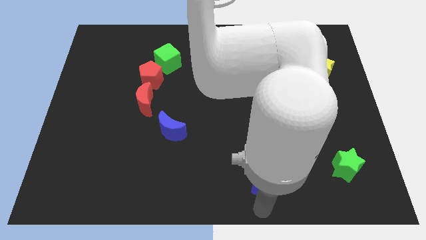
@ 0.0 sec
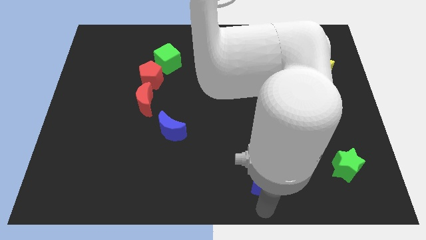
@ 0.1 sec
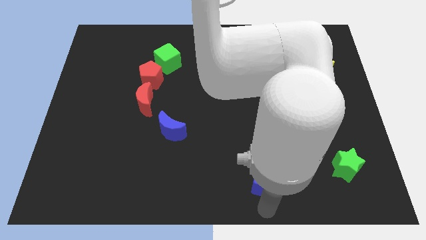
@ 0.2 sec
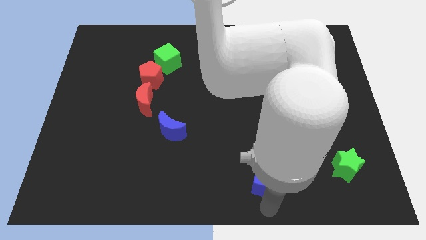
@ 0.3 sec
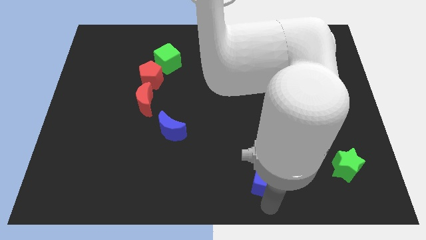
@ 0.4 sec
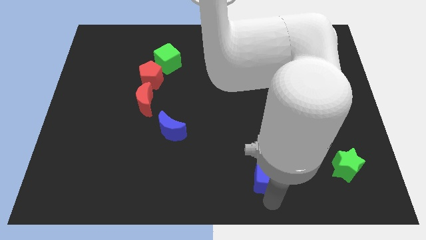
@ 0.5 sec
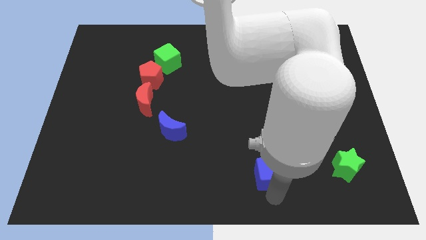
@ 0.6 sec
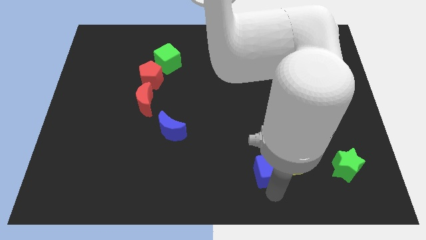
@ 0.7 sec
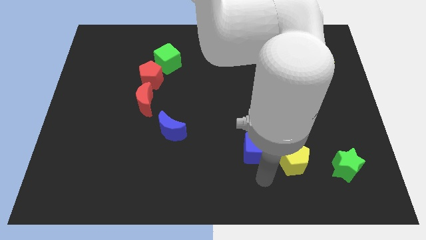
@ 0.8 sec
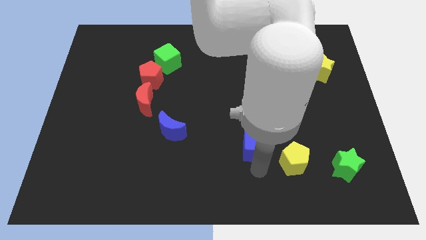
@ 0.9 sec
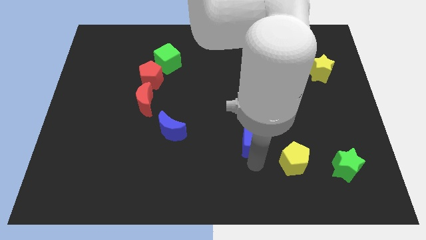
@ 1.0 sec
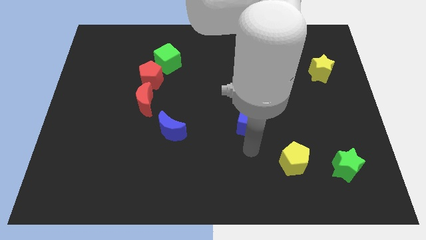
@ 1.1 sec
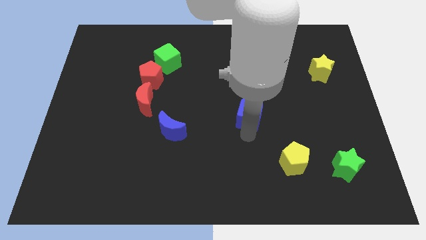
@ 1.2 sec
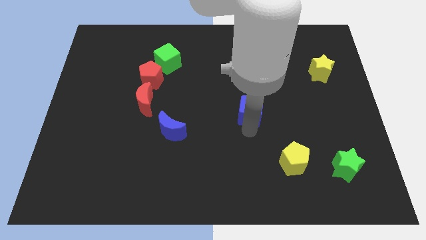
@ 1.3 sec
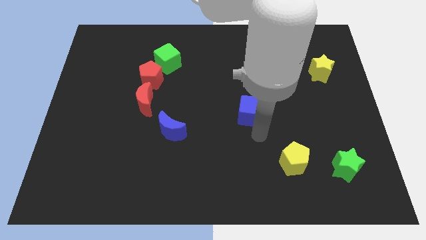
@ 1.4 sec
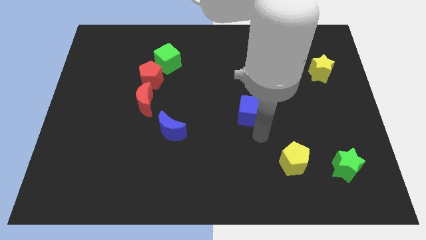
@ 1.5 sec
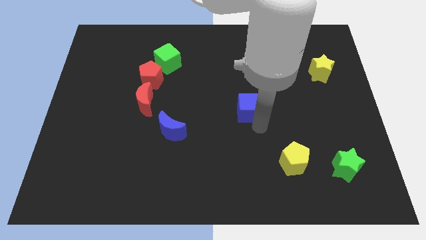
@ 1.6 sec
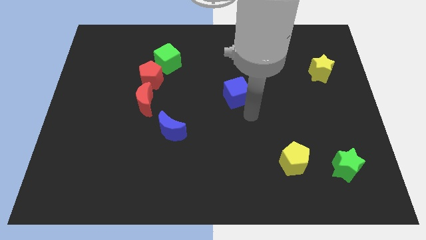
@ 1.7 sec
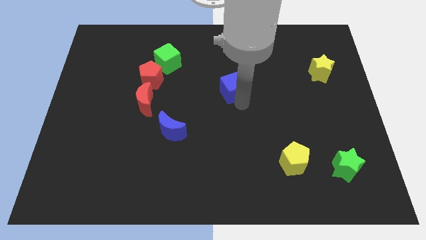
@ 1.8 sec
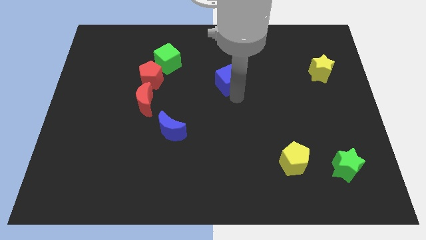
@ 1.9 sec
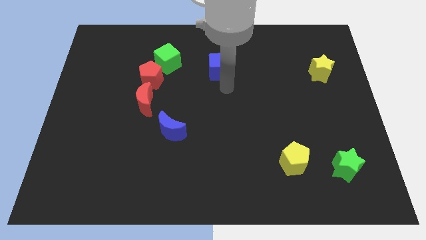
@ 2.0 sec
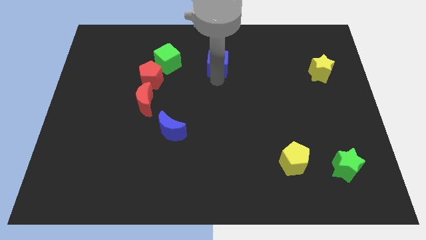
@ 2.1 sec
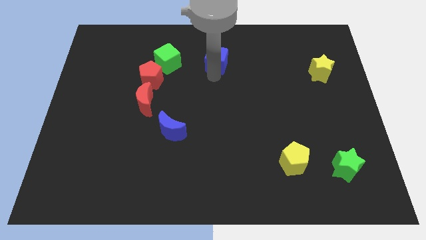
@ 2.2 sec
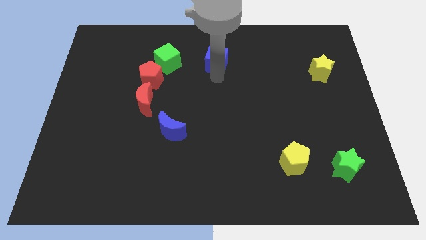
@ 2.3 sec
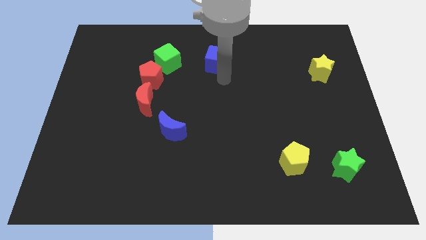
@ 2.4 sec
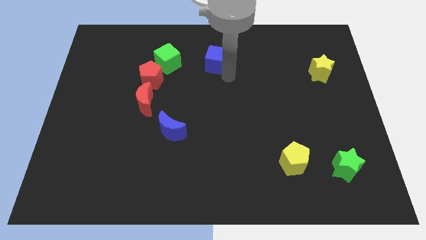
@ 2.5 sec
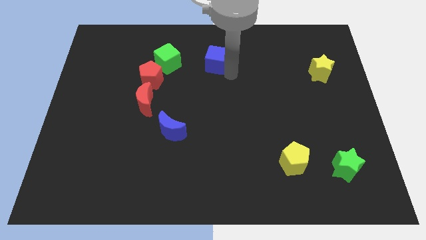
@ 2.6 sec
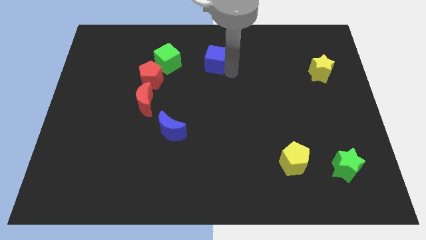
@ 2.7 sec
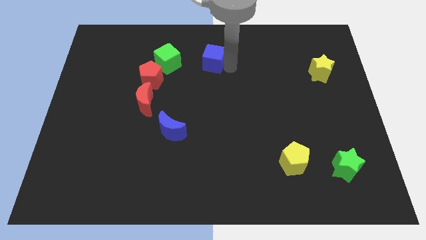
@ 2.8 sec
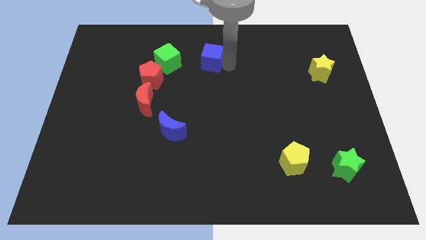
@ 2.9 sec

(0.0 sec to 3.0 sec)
push blue cube beside green cube

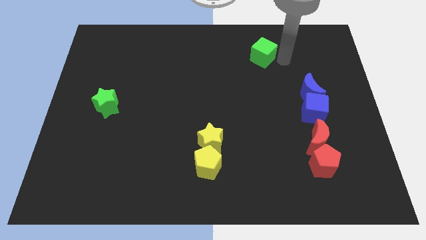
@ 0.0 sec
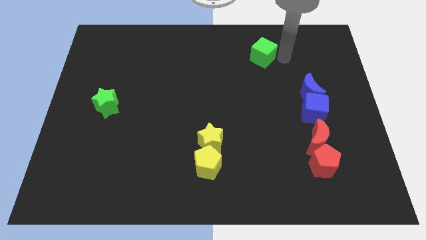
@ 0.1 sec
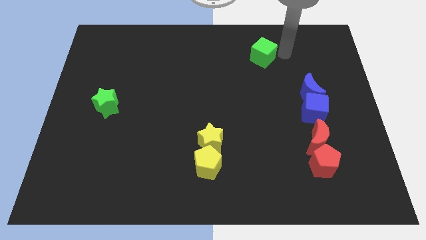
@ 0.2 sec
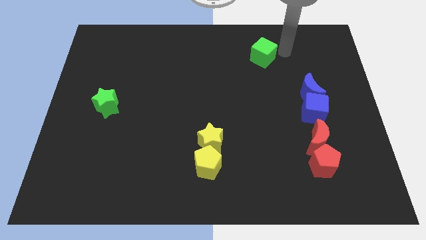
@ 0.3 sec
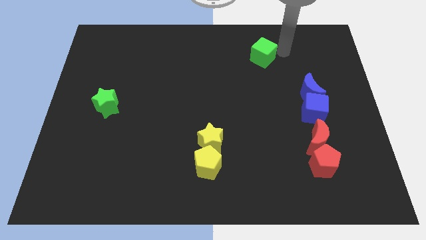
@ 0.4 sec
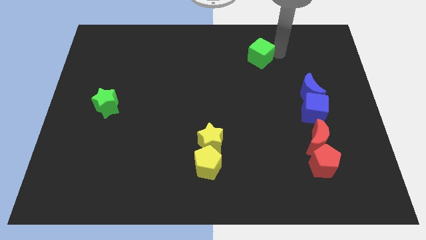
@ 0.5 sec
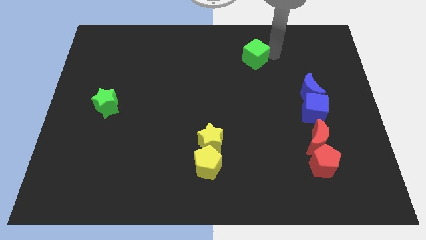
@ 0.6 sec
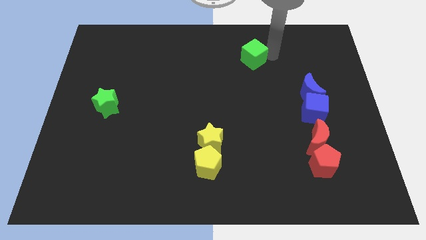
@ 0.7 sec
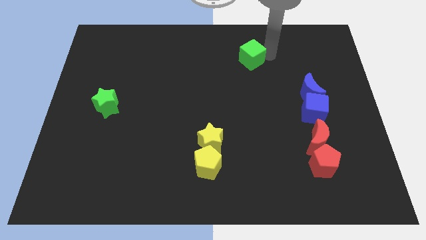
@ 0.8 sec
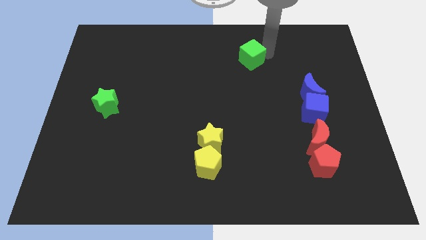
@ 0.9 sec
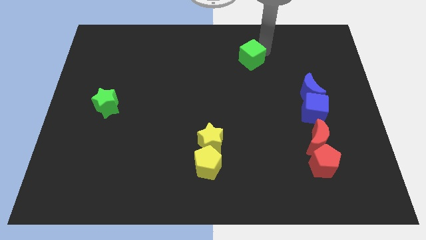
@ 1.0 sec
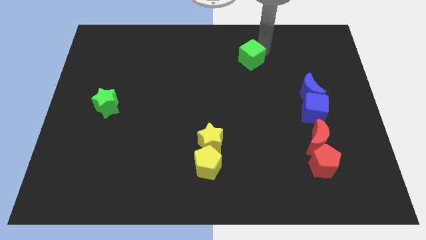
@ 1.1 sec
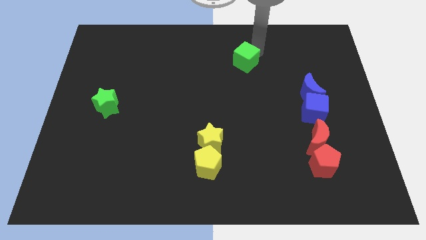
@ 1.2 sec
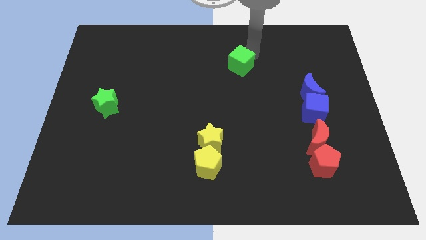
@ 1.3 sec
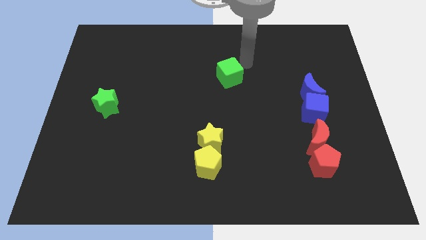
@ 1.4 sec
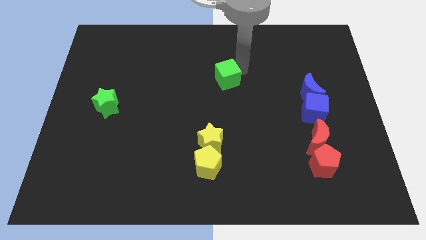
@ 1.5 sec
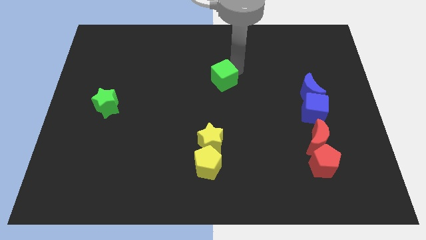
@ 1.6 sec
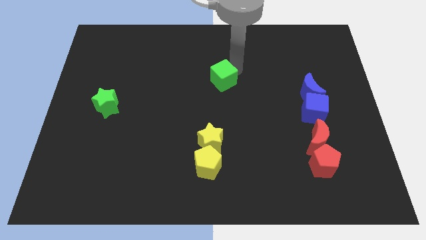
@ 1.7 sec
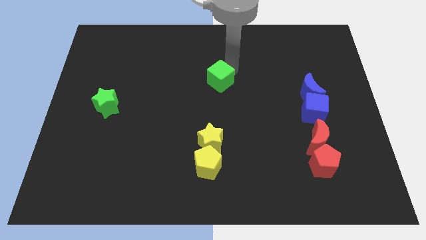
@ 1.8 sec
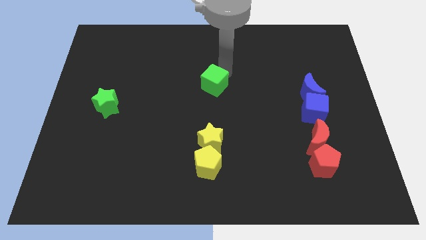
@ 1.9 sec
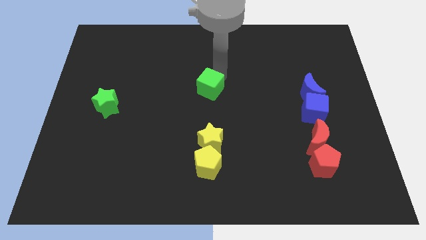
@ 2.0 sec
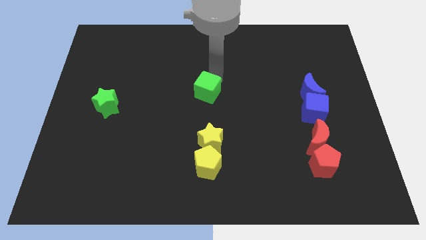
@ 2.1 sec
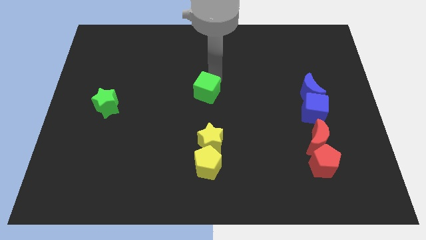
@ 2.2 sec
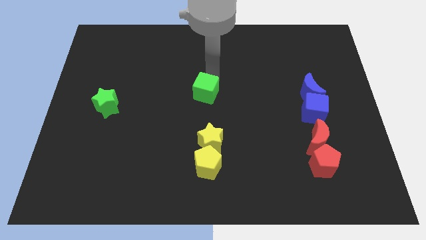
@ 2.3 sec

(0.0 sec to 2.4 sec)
push the green star down to the middle of the board

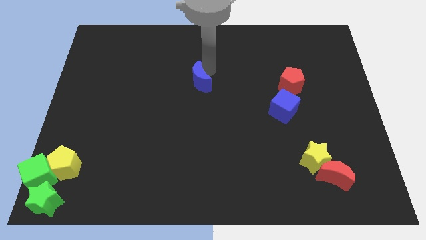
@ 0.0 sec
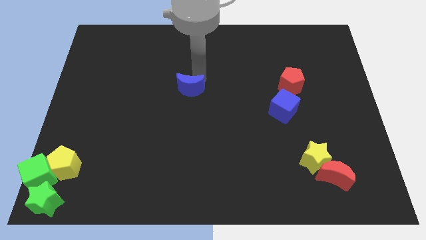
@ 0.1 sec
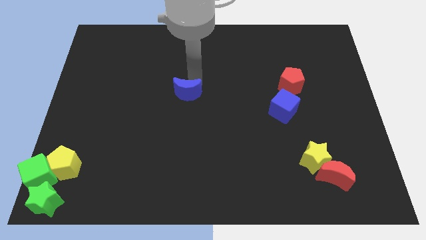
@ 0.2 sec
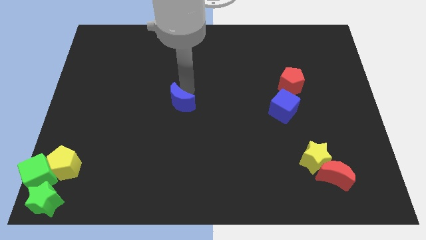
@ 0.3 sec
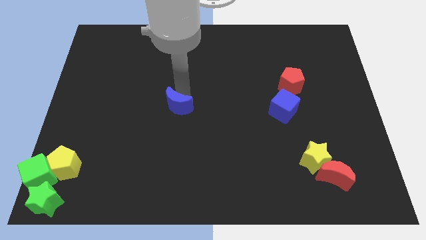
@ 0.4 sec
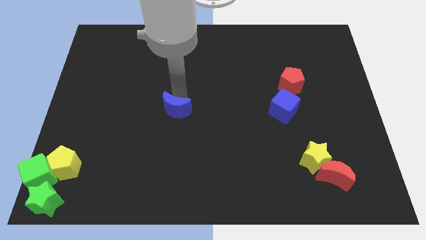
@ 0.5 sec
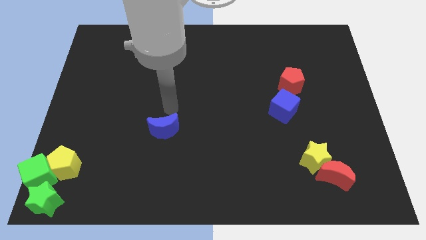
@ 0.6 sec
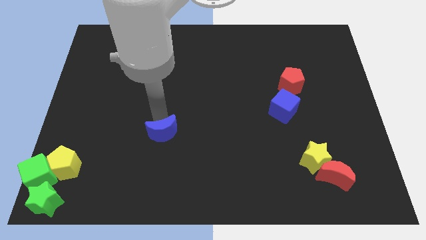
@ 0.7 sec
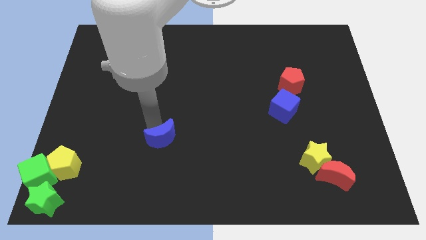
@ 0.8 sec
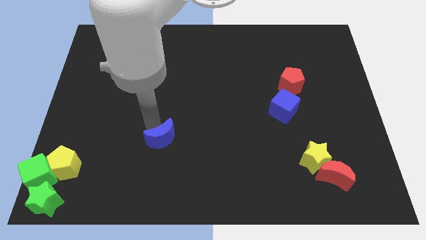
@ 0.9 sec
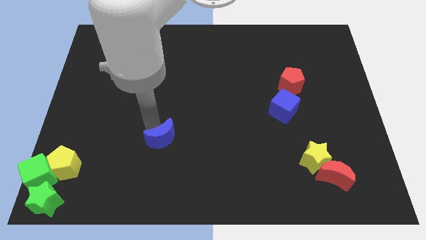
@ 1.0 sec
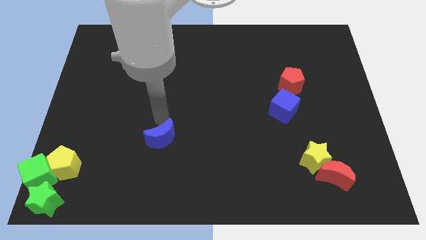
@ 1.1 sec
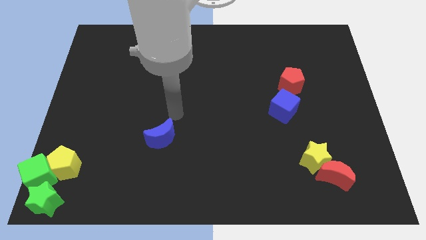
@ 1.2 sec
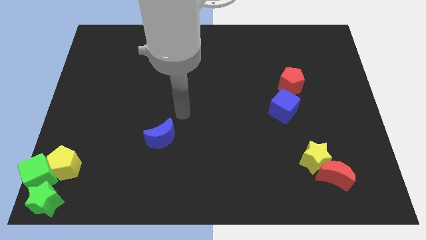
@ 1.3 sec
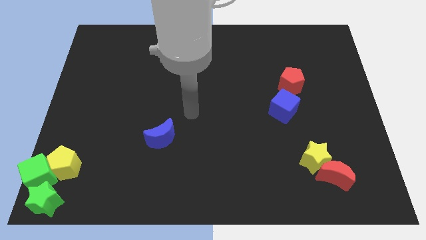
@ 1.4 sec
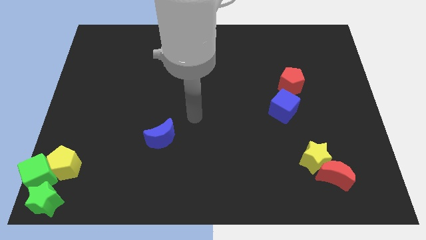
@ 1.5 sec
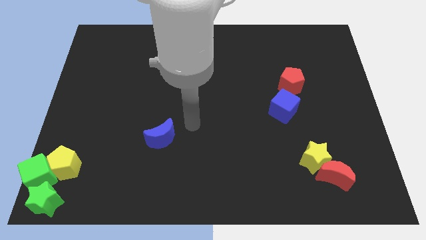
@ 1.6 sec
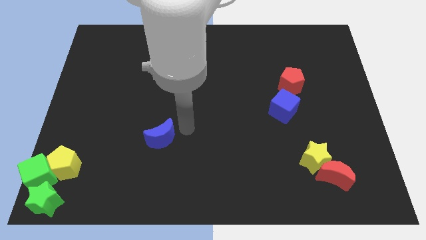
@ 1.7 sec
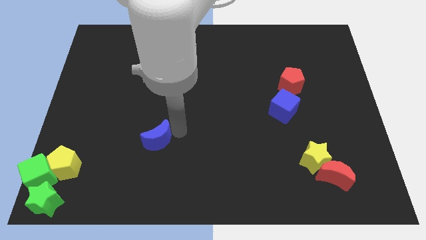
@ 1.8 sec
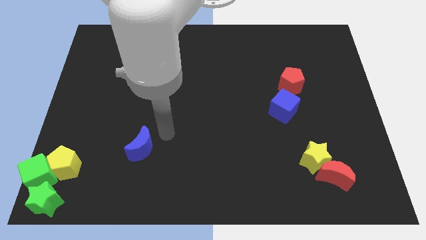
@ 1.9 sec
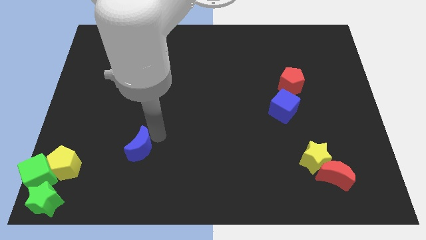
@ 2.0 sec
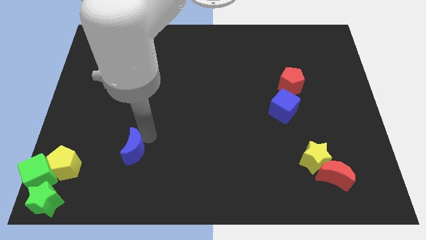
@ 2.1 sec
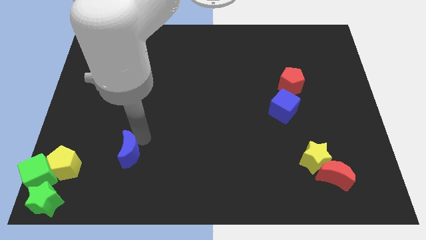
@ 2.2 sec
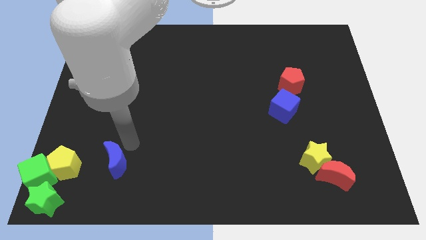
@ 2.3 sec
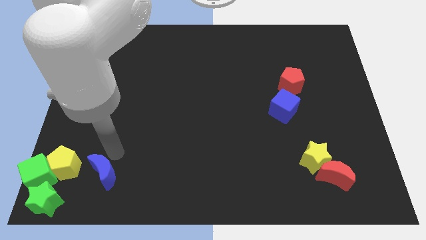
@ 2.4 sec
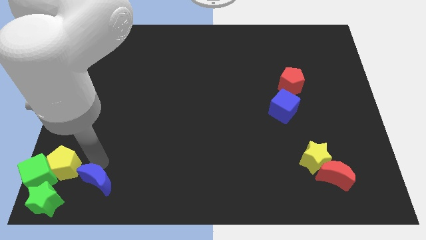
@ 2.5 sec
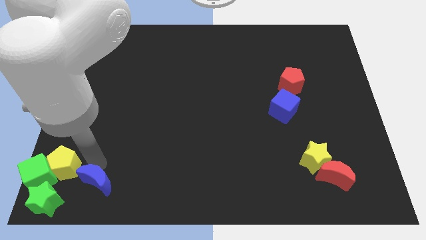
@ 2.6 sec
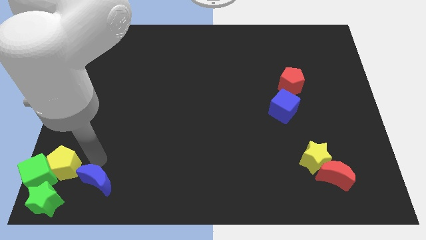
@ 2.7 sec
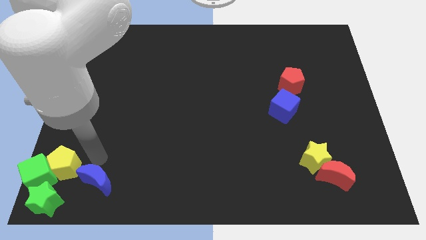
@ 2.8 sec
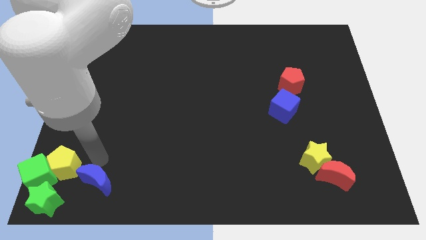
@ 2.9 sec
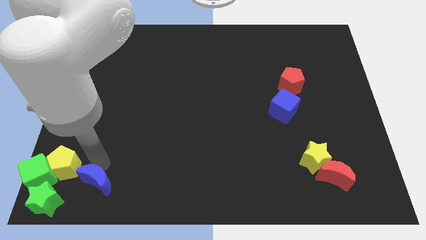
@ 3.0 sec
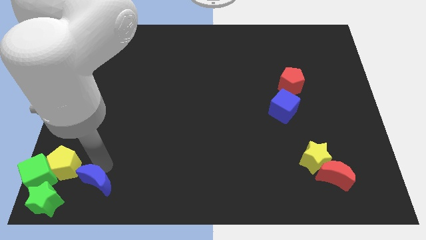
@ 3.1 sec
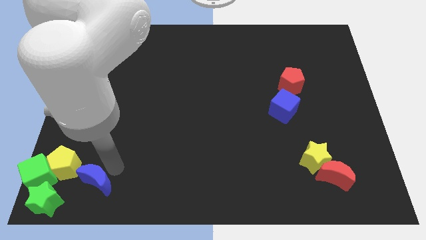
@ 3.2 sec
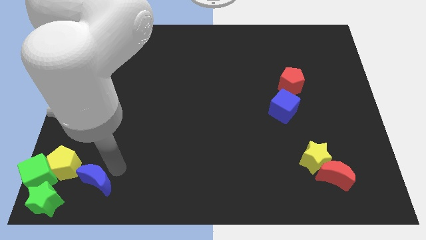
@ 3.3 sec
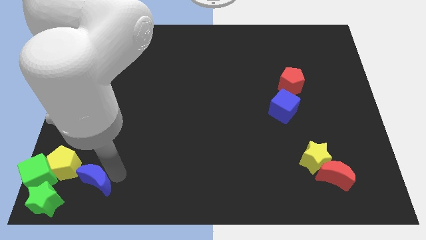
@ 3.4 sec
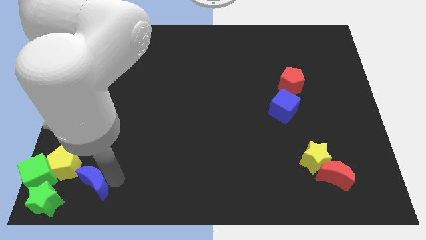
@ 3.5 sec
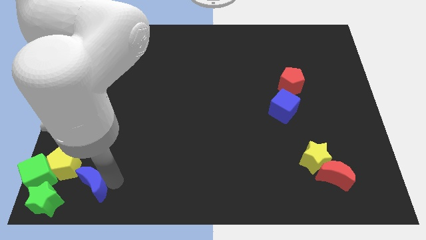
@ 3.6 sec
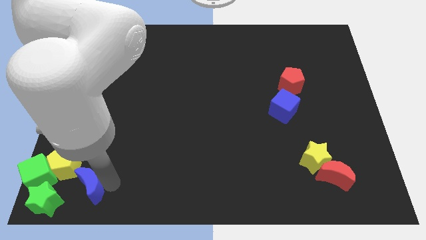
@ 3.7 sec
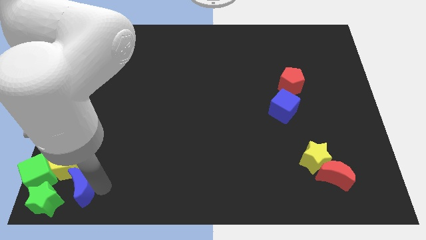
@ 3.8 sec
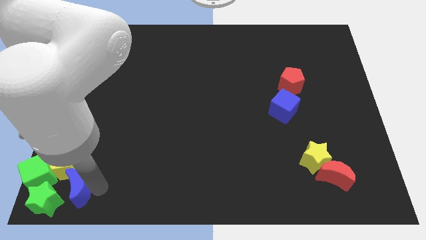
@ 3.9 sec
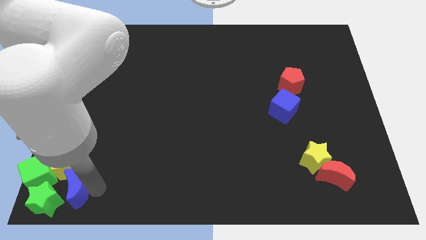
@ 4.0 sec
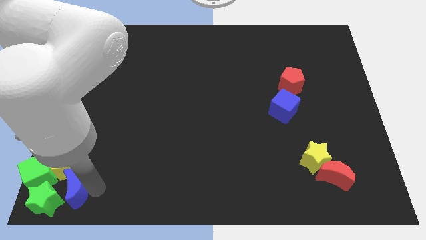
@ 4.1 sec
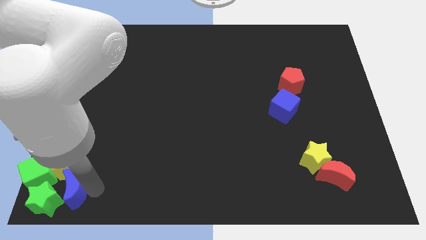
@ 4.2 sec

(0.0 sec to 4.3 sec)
push the blue crescent towards the green star
